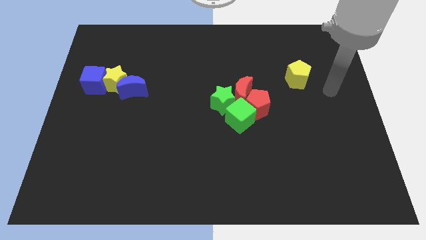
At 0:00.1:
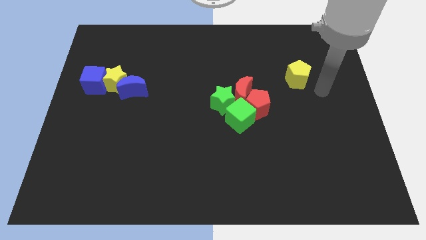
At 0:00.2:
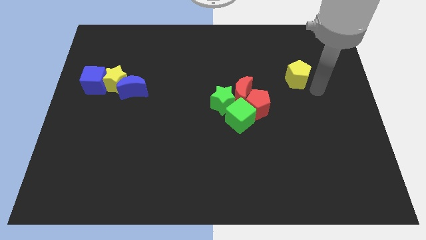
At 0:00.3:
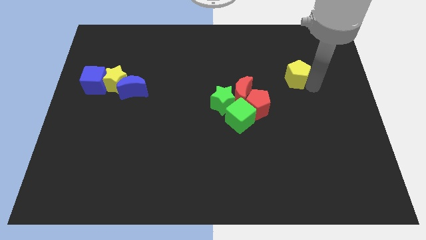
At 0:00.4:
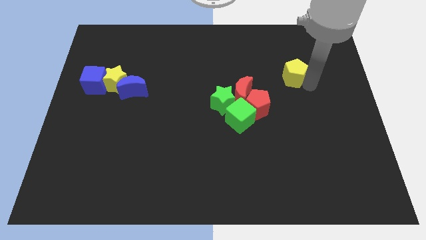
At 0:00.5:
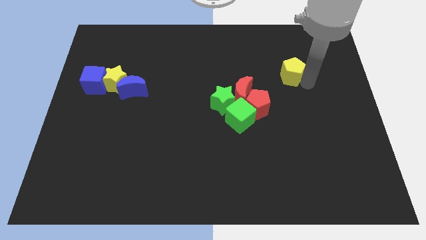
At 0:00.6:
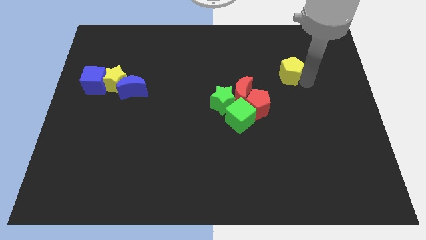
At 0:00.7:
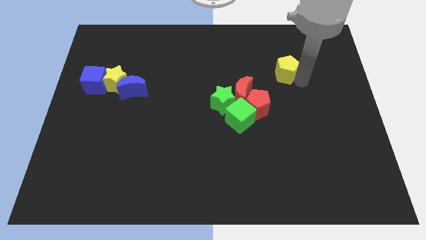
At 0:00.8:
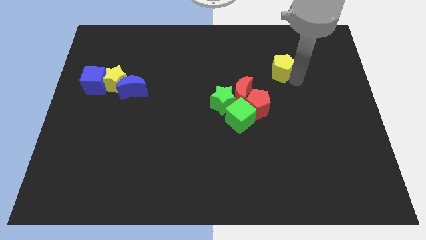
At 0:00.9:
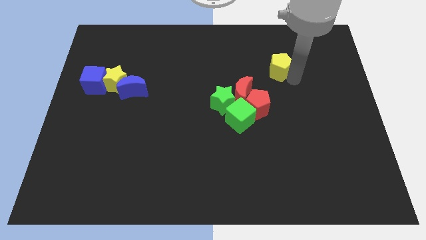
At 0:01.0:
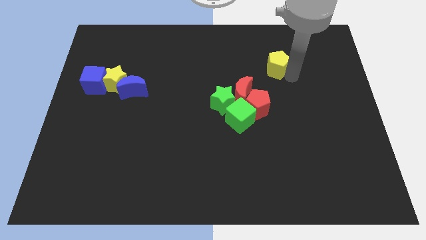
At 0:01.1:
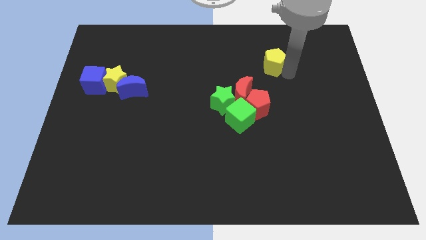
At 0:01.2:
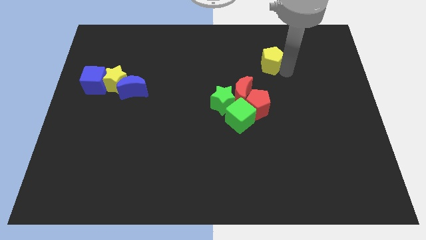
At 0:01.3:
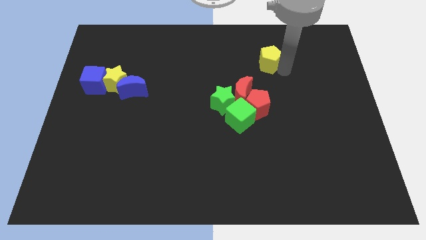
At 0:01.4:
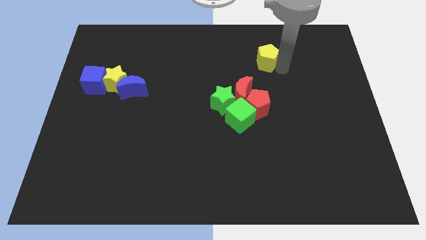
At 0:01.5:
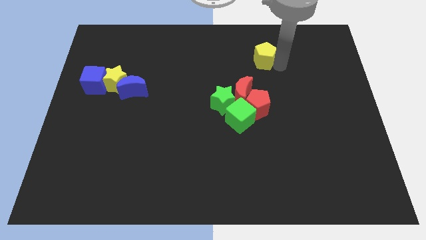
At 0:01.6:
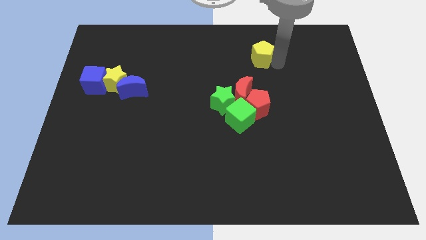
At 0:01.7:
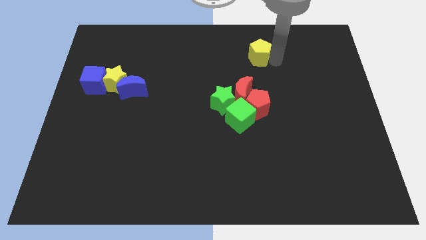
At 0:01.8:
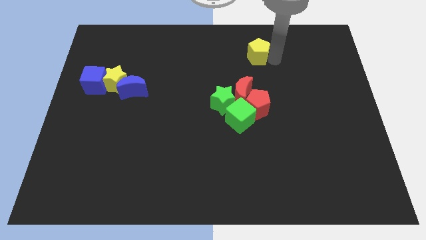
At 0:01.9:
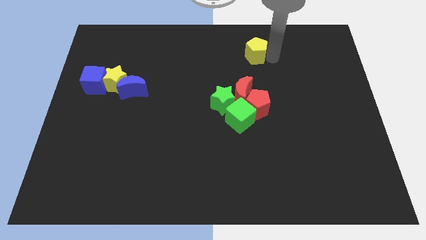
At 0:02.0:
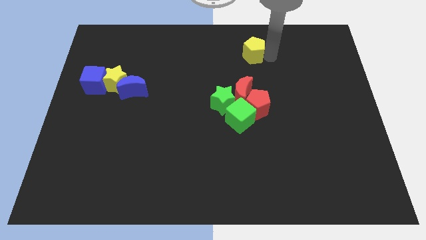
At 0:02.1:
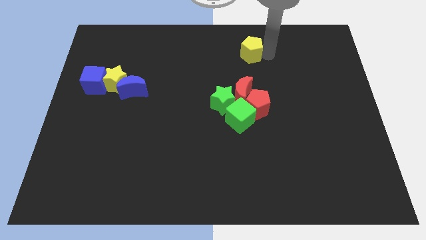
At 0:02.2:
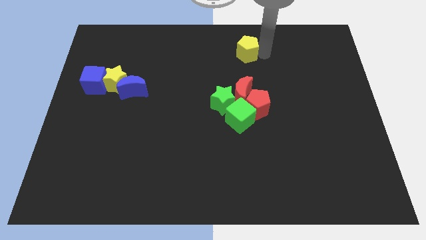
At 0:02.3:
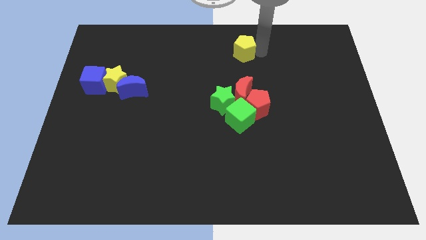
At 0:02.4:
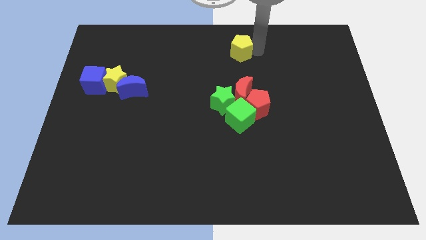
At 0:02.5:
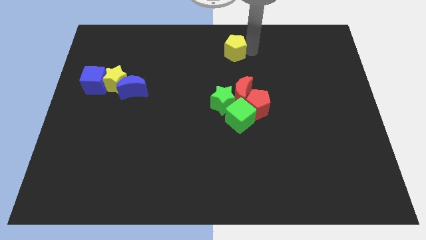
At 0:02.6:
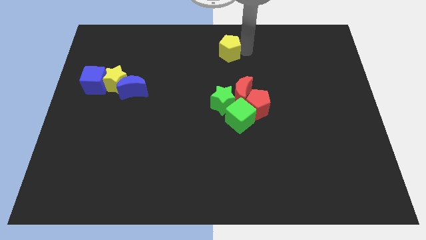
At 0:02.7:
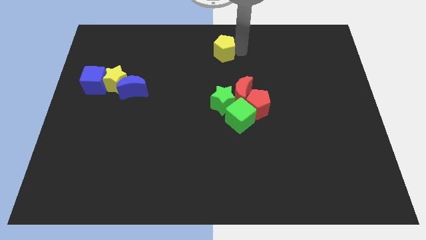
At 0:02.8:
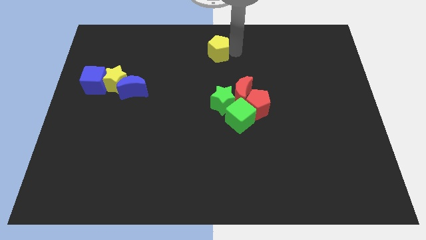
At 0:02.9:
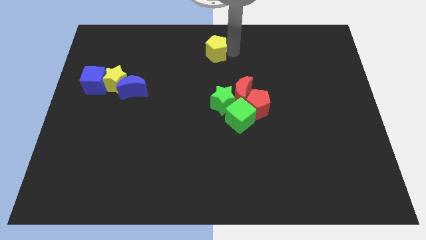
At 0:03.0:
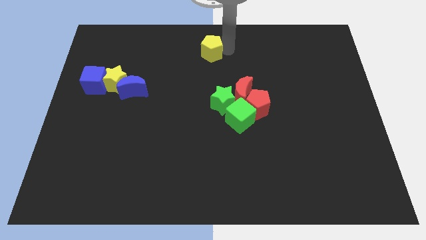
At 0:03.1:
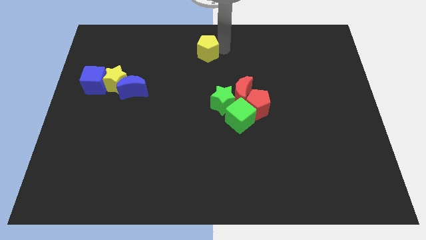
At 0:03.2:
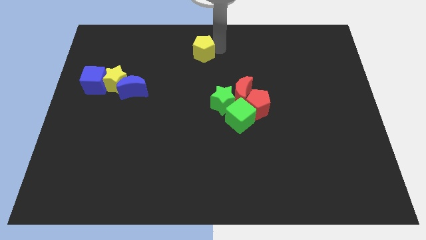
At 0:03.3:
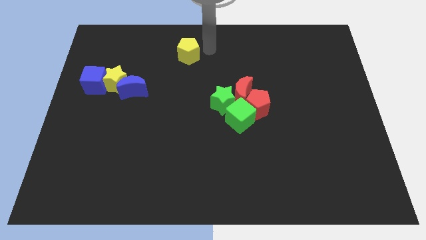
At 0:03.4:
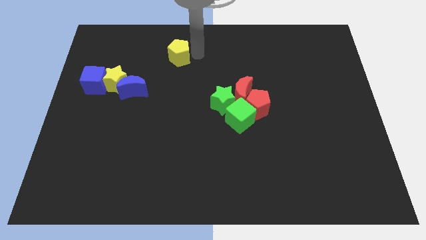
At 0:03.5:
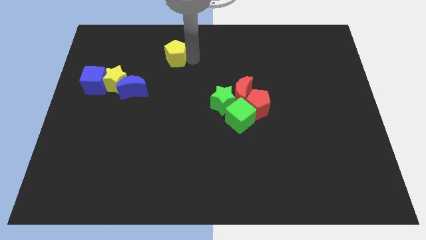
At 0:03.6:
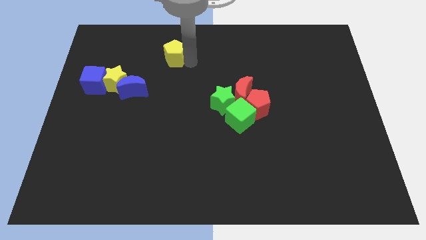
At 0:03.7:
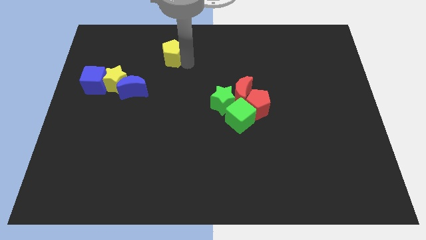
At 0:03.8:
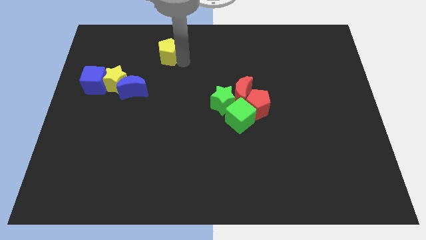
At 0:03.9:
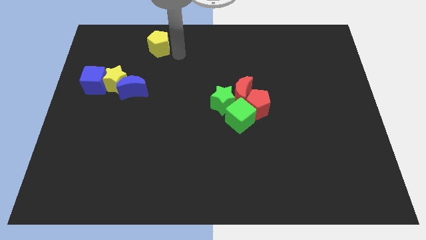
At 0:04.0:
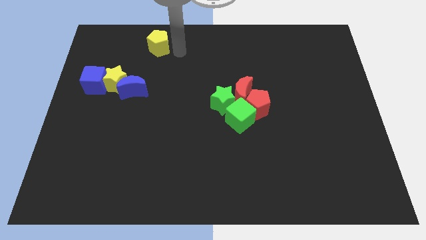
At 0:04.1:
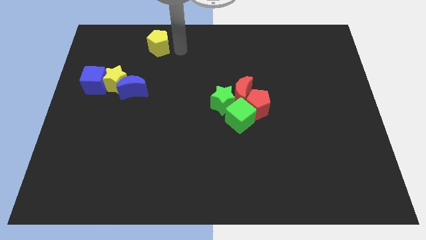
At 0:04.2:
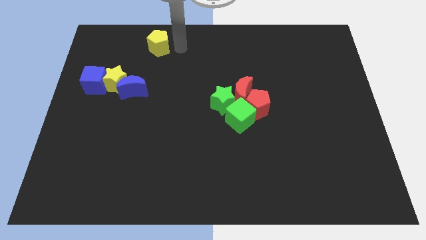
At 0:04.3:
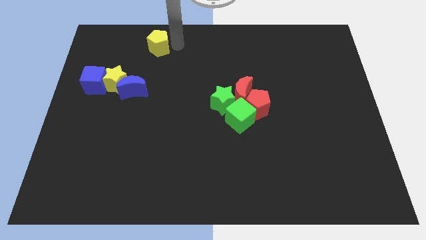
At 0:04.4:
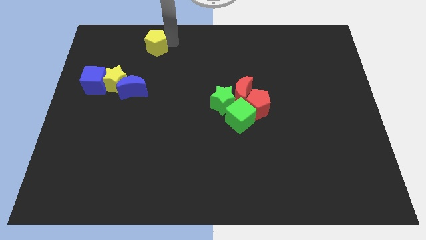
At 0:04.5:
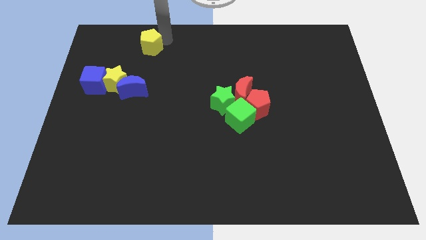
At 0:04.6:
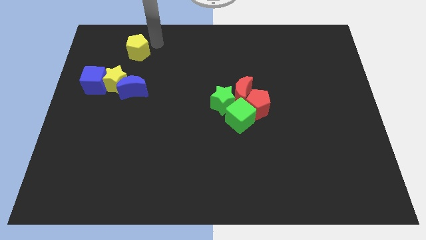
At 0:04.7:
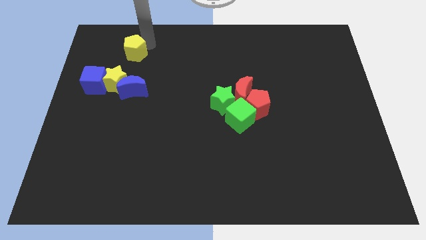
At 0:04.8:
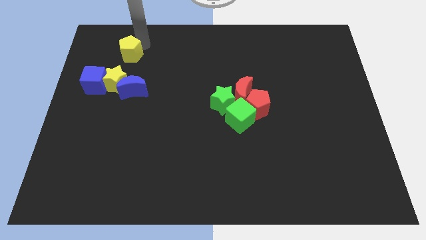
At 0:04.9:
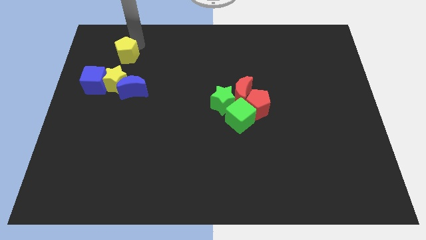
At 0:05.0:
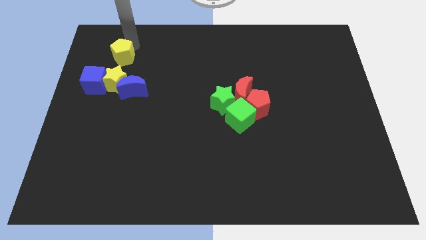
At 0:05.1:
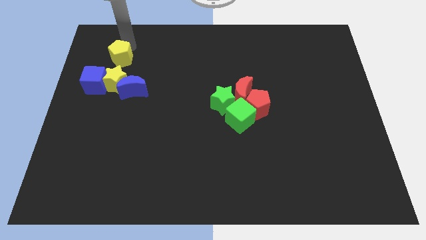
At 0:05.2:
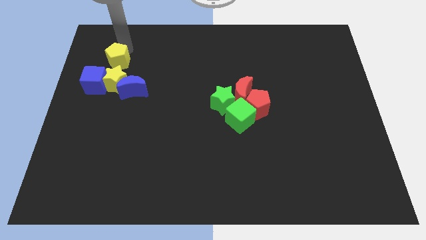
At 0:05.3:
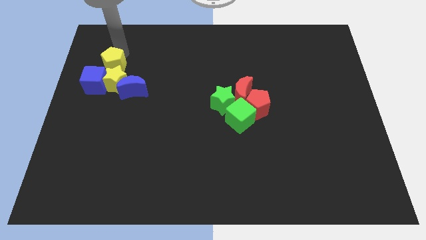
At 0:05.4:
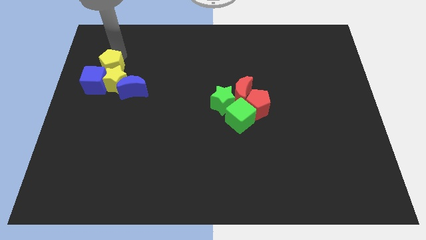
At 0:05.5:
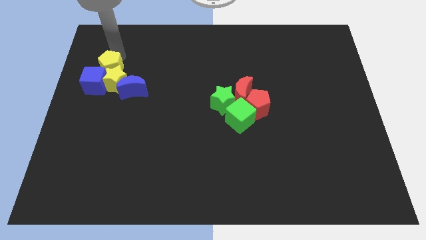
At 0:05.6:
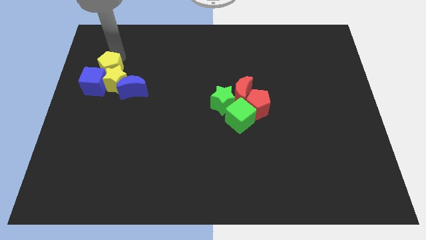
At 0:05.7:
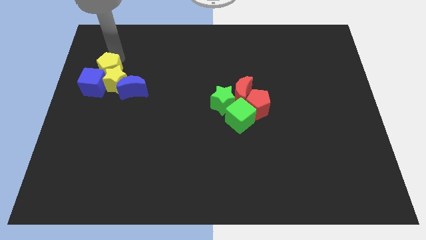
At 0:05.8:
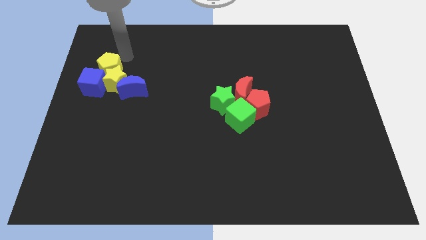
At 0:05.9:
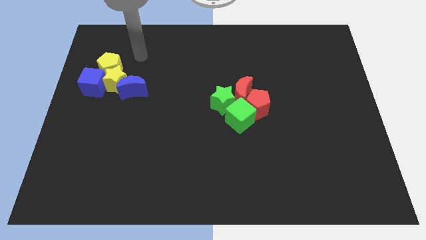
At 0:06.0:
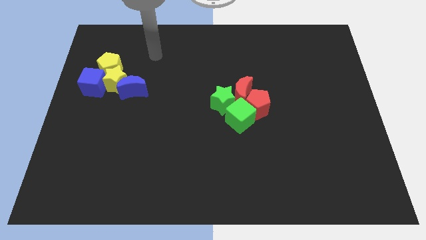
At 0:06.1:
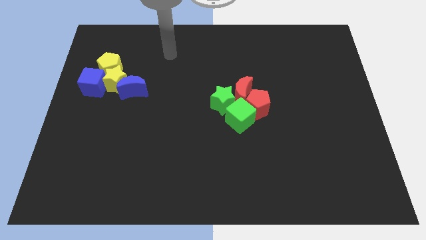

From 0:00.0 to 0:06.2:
add yellow pentagon into the group of blocks

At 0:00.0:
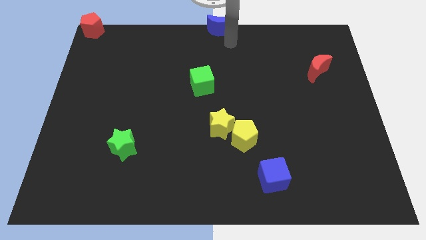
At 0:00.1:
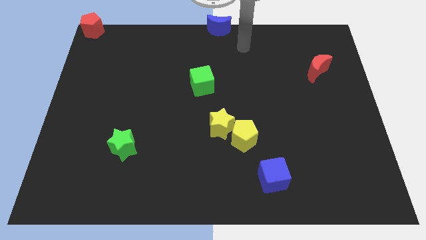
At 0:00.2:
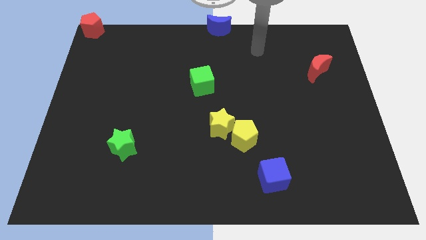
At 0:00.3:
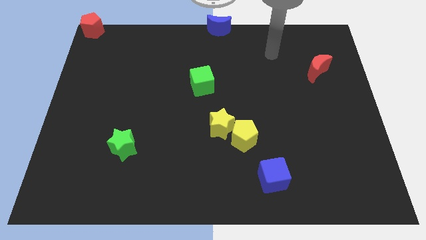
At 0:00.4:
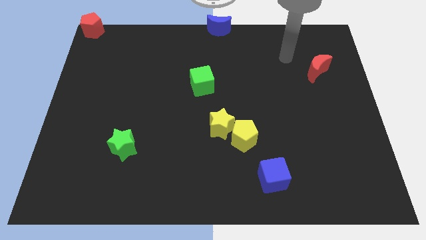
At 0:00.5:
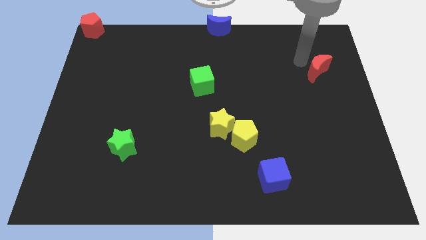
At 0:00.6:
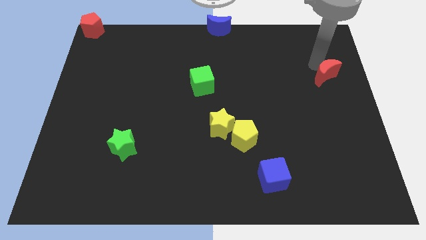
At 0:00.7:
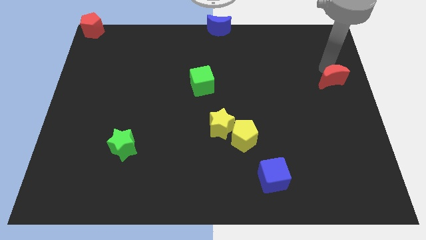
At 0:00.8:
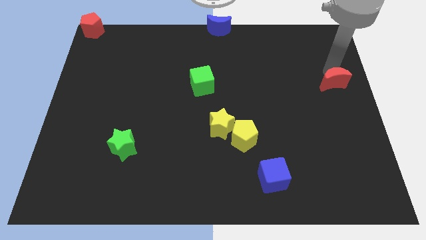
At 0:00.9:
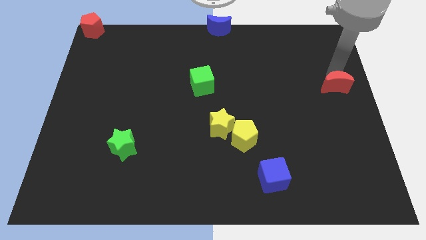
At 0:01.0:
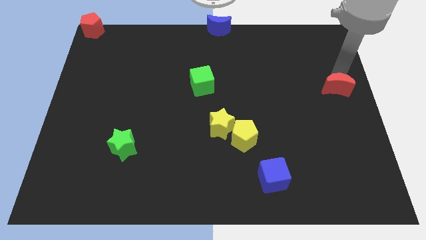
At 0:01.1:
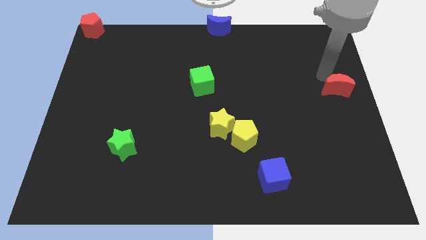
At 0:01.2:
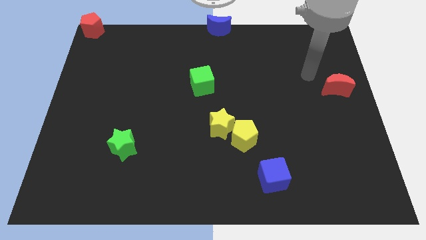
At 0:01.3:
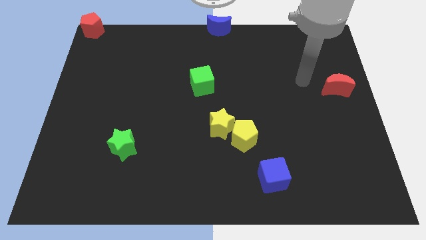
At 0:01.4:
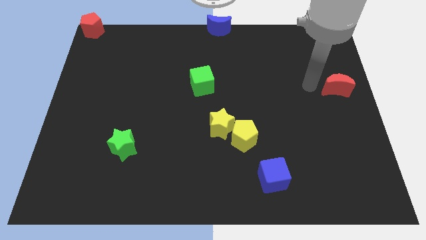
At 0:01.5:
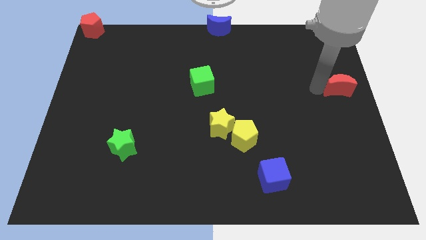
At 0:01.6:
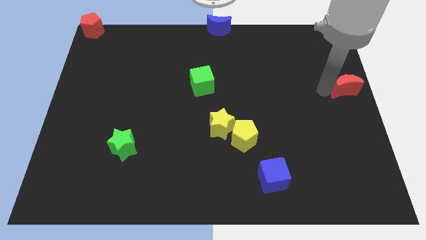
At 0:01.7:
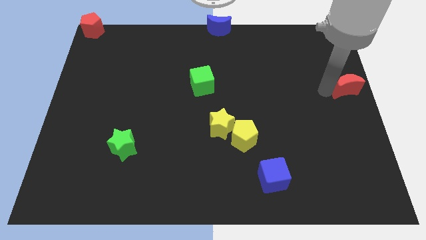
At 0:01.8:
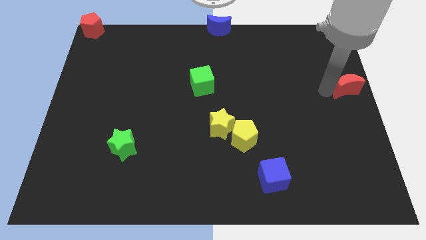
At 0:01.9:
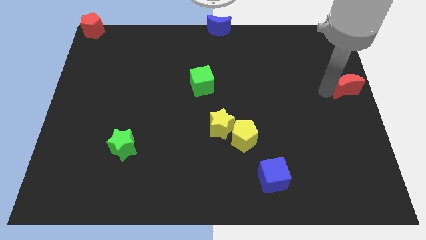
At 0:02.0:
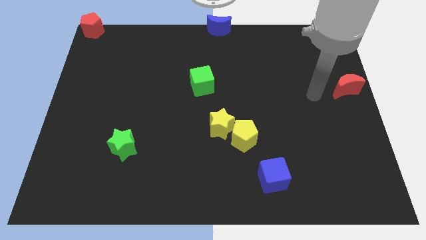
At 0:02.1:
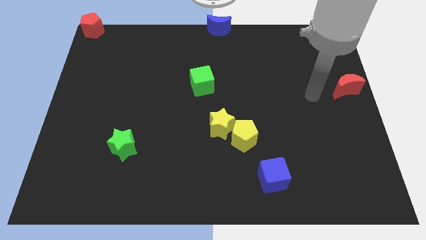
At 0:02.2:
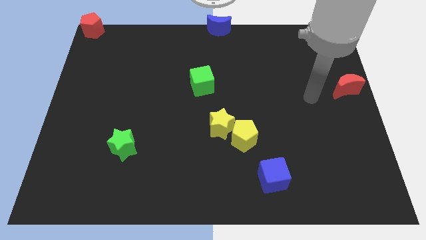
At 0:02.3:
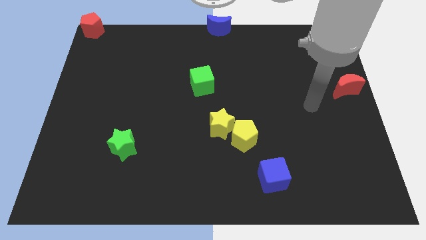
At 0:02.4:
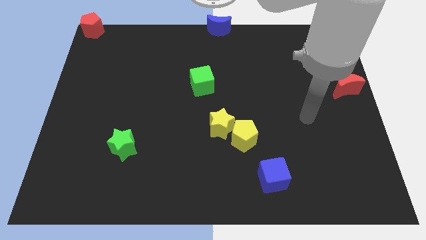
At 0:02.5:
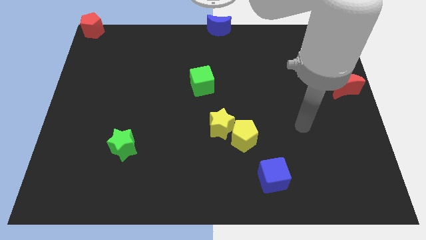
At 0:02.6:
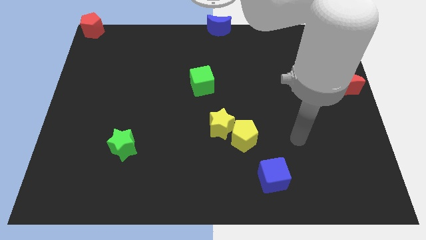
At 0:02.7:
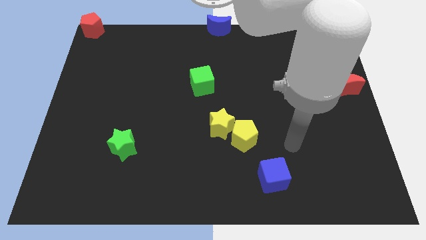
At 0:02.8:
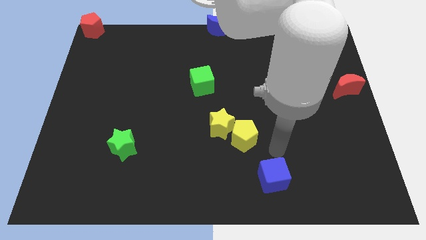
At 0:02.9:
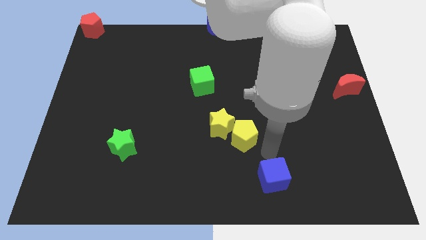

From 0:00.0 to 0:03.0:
move red crescent slightly to the right side of the board
